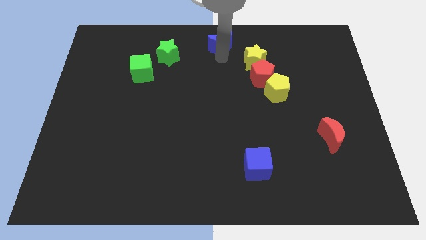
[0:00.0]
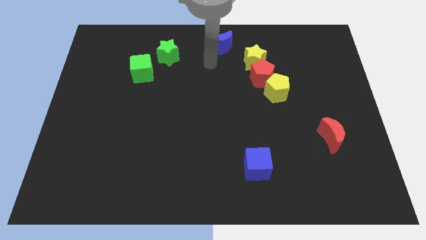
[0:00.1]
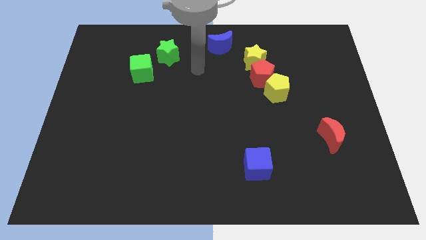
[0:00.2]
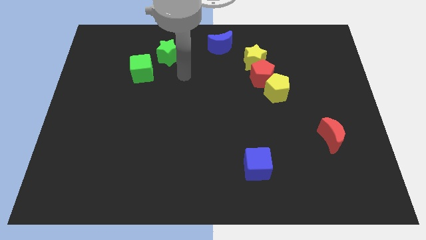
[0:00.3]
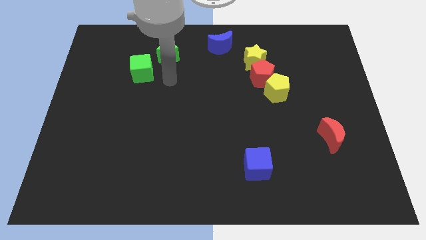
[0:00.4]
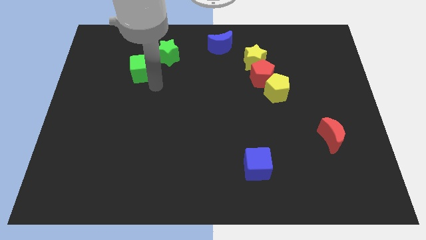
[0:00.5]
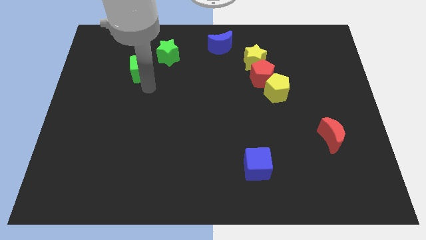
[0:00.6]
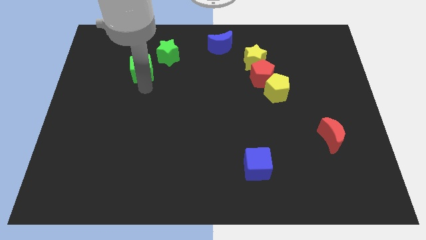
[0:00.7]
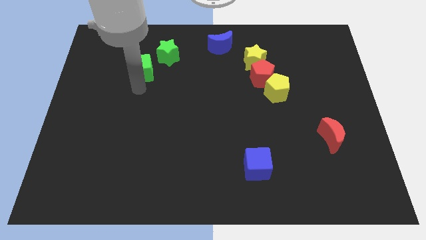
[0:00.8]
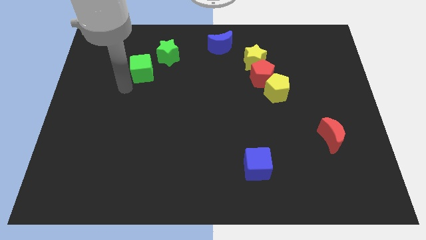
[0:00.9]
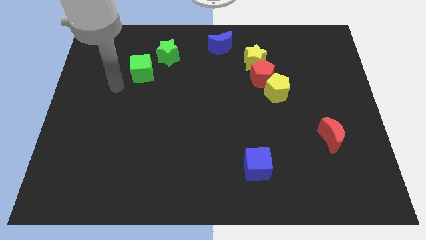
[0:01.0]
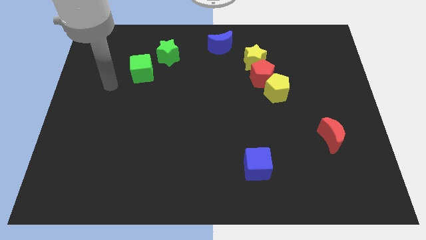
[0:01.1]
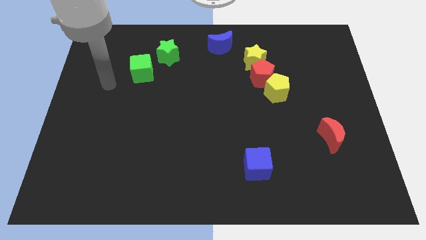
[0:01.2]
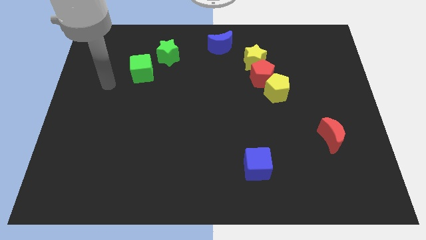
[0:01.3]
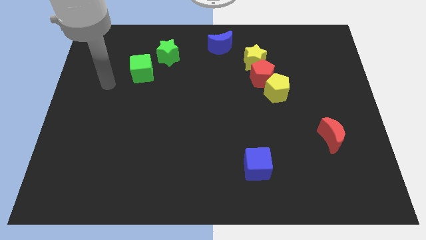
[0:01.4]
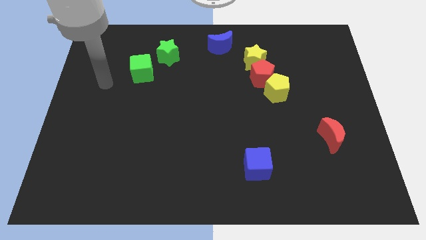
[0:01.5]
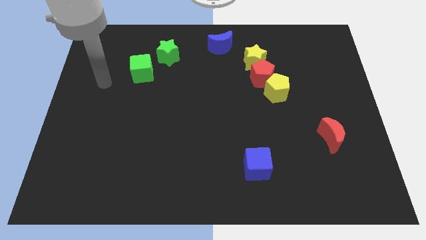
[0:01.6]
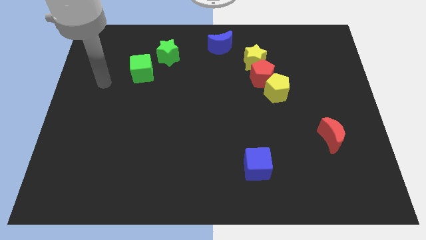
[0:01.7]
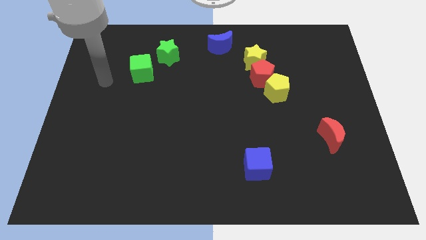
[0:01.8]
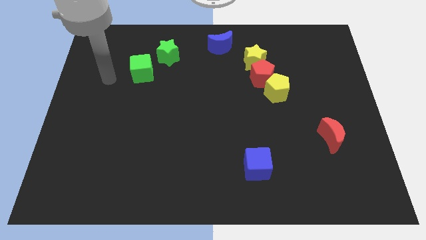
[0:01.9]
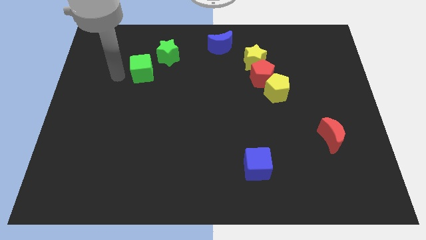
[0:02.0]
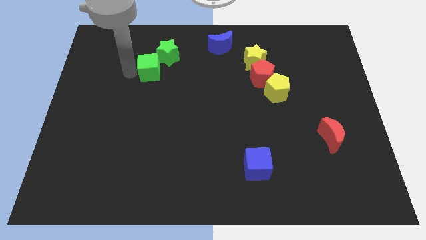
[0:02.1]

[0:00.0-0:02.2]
point your arm at the left of the green cube

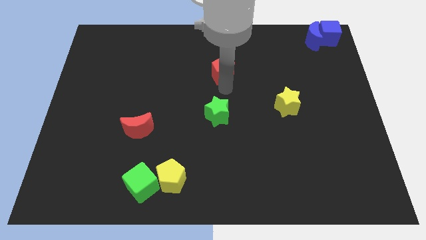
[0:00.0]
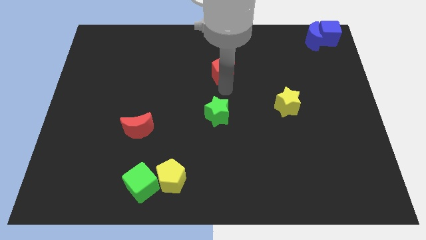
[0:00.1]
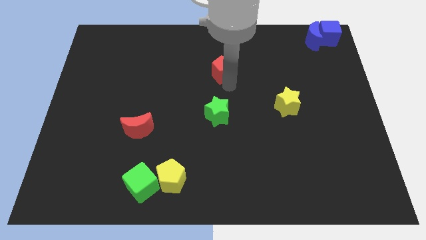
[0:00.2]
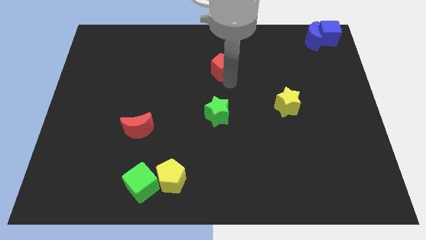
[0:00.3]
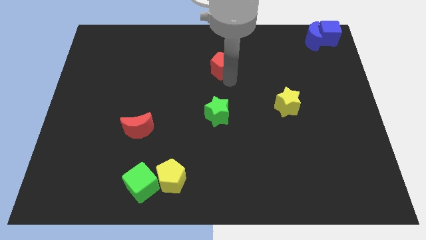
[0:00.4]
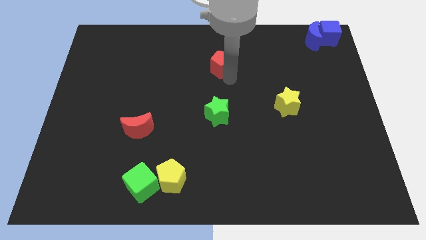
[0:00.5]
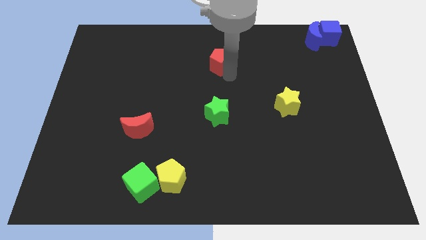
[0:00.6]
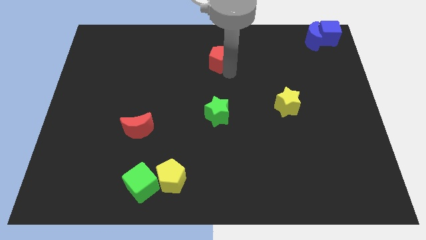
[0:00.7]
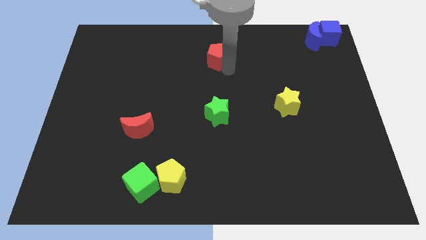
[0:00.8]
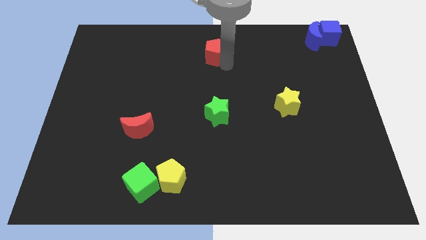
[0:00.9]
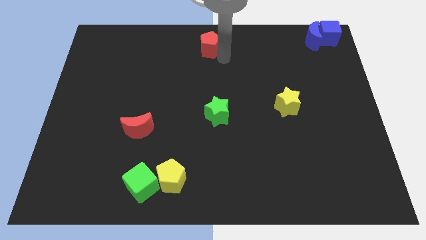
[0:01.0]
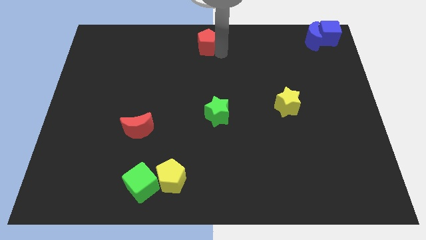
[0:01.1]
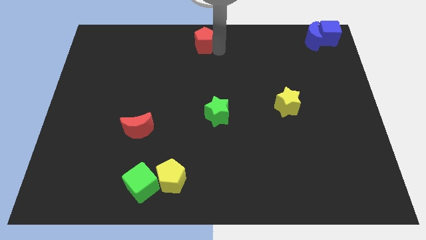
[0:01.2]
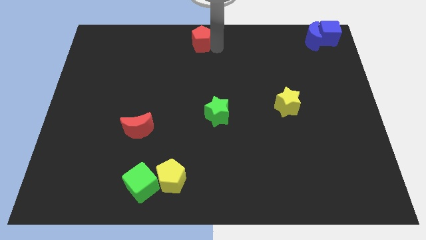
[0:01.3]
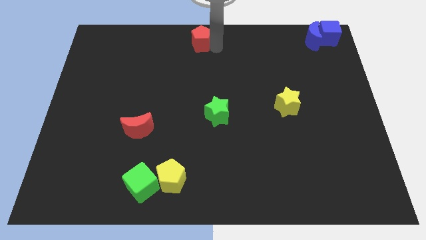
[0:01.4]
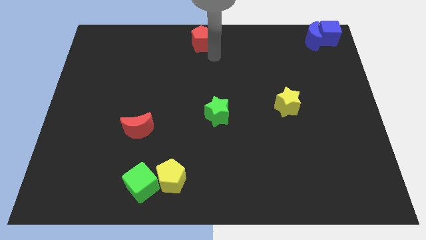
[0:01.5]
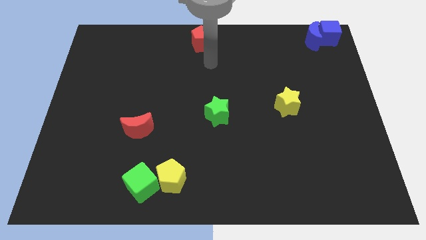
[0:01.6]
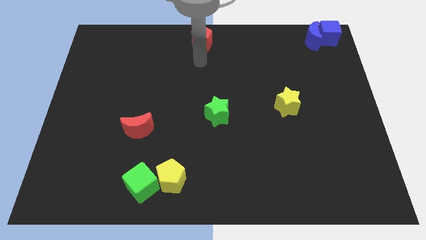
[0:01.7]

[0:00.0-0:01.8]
push the red pentagon to the top center of the board

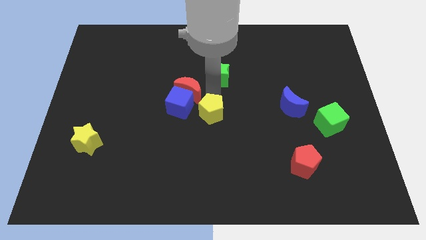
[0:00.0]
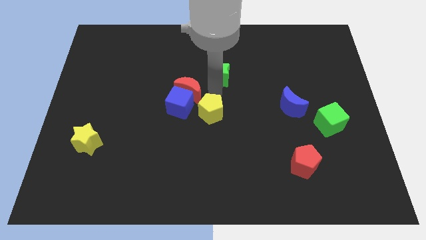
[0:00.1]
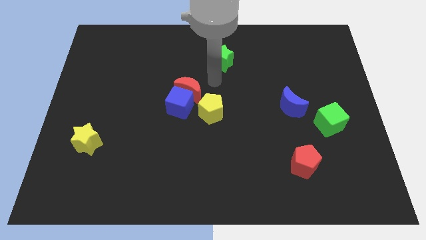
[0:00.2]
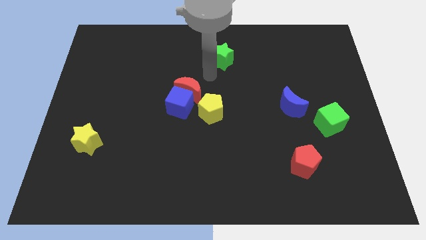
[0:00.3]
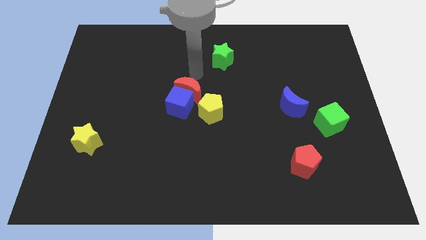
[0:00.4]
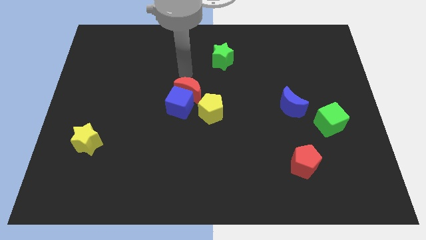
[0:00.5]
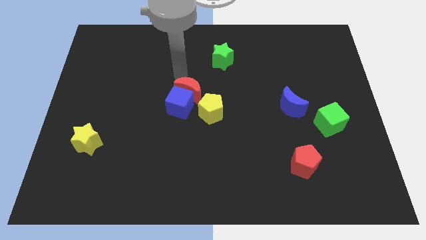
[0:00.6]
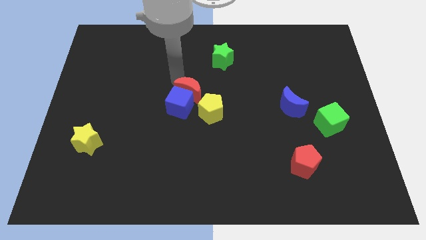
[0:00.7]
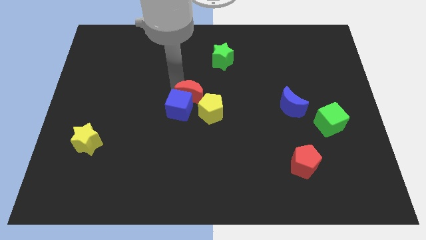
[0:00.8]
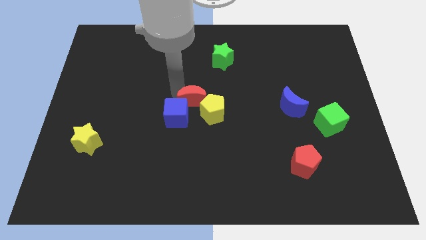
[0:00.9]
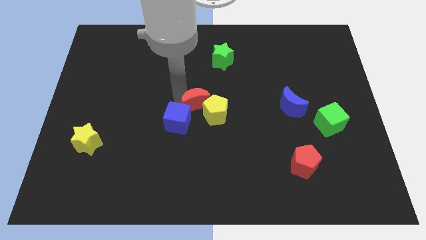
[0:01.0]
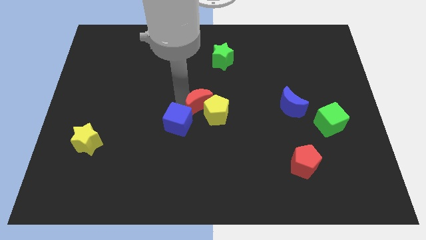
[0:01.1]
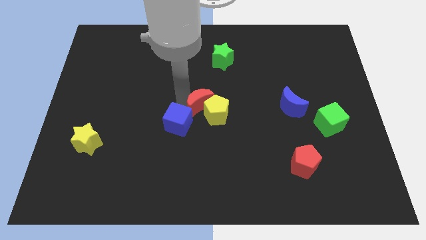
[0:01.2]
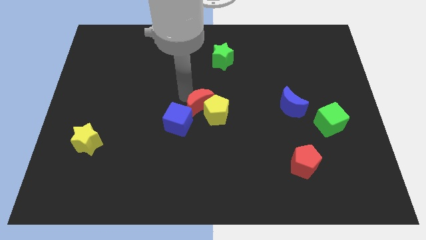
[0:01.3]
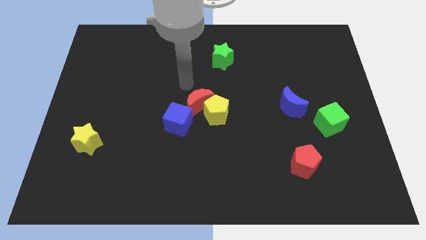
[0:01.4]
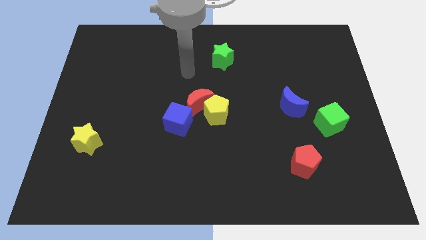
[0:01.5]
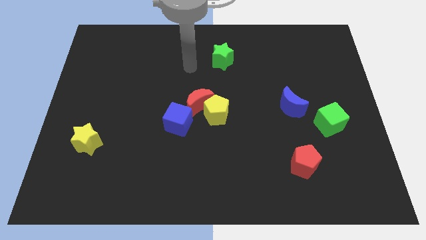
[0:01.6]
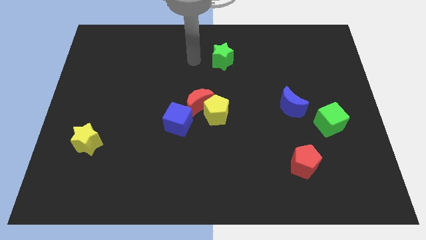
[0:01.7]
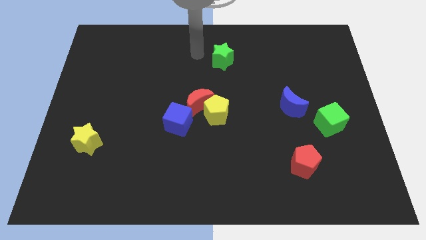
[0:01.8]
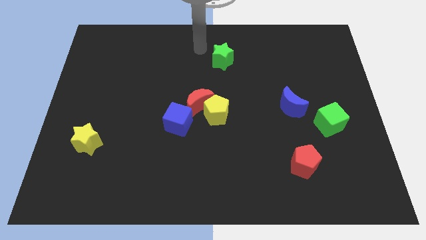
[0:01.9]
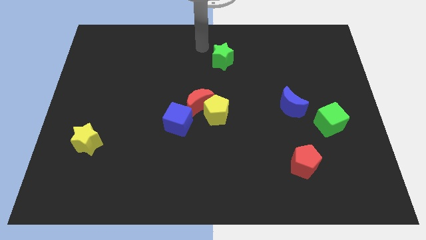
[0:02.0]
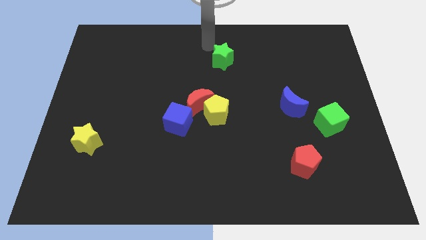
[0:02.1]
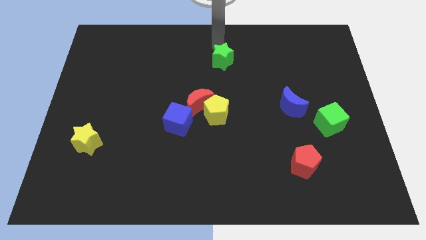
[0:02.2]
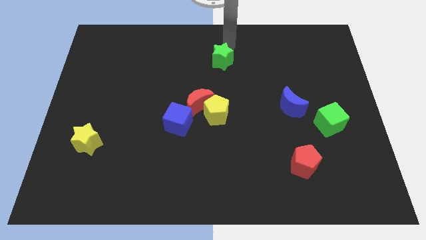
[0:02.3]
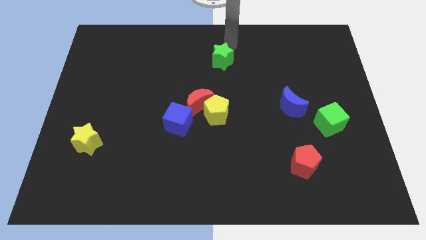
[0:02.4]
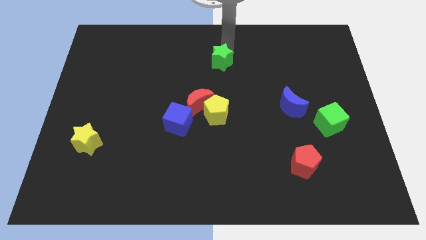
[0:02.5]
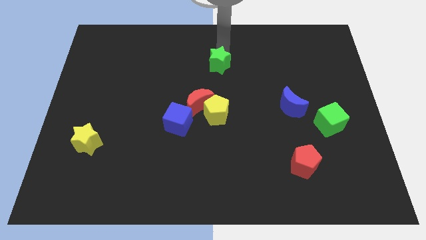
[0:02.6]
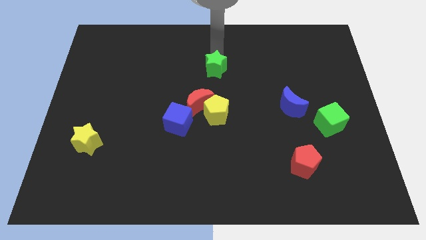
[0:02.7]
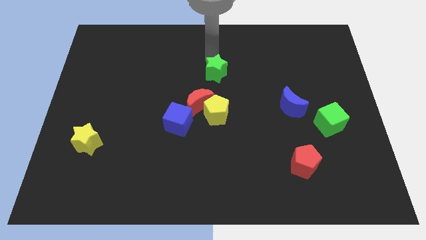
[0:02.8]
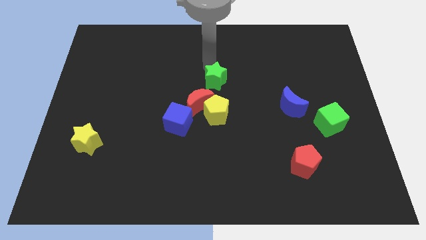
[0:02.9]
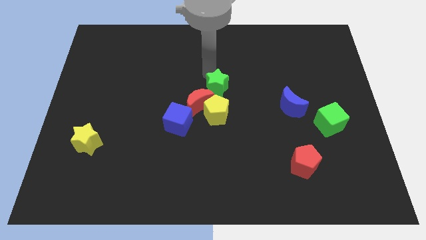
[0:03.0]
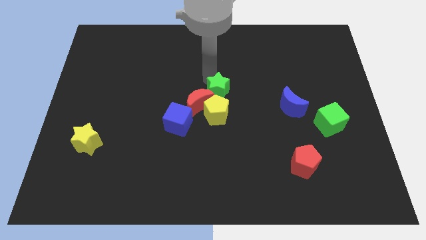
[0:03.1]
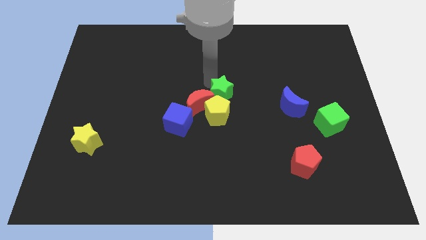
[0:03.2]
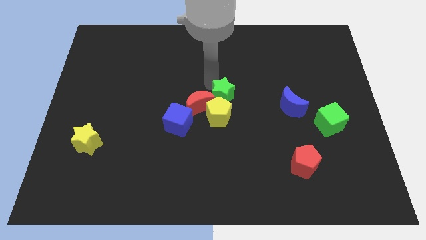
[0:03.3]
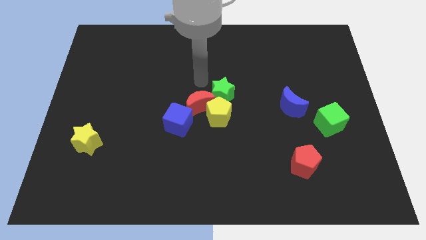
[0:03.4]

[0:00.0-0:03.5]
place the yellow pentagon green star red moon and blue cube at the center of the board

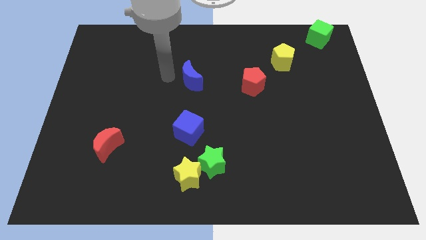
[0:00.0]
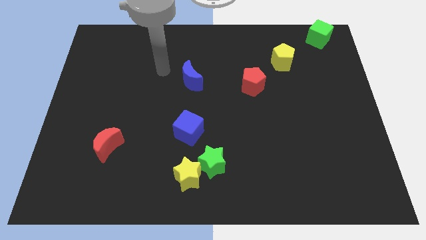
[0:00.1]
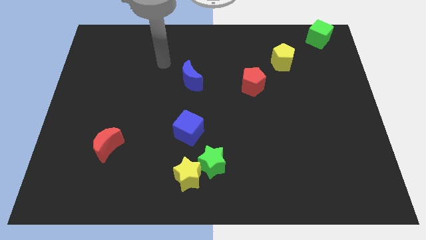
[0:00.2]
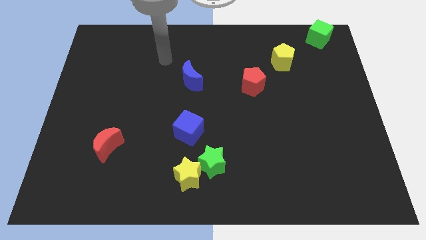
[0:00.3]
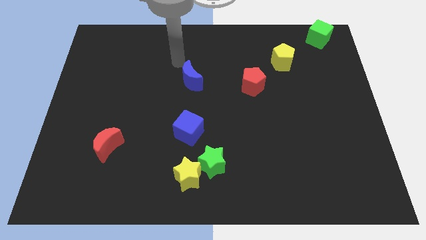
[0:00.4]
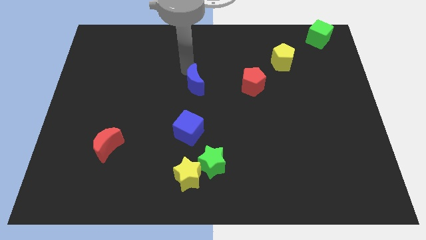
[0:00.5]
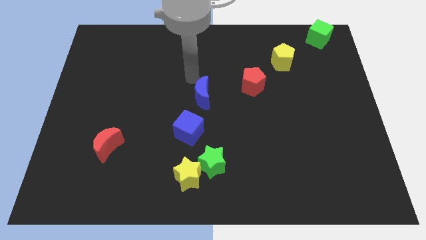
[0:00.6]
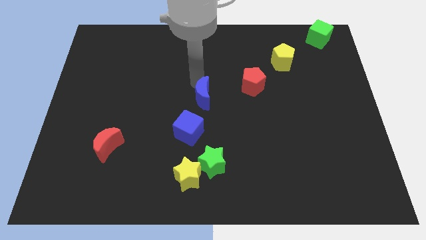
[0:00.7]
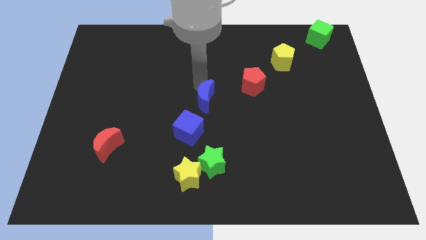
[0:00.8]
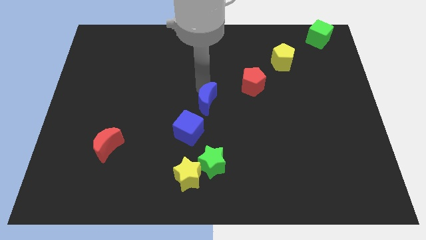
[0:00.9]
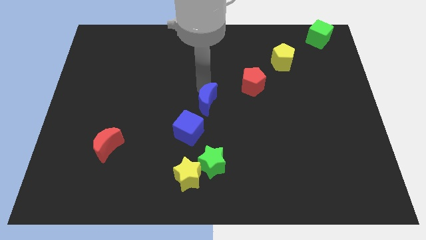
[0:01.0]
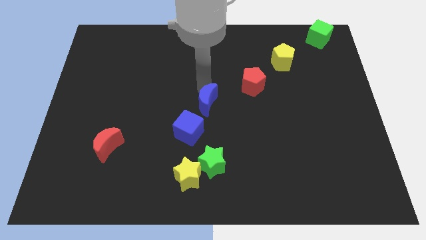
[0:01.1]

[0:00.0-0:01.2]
place blue crescent at the top of blue cube

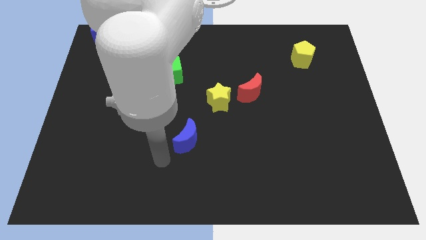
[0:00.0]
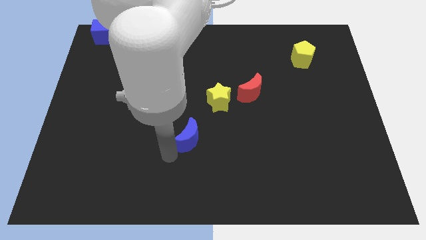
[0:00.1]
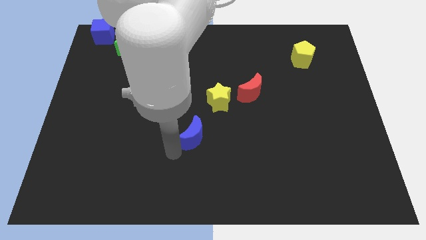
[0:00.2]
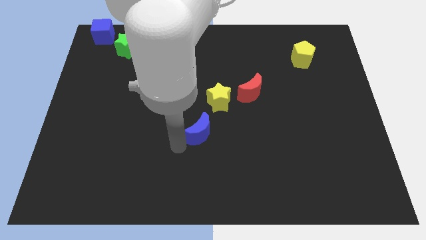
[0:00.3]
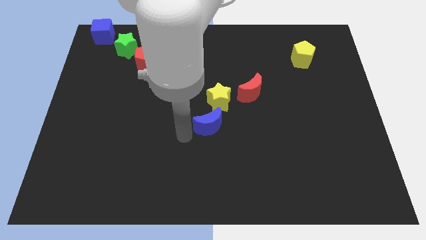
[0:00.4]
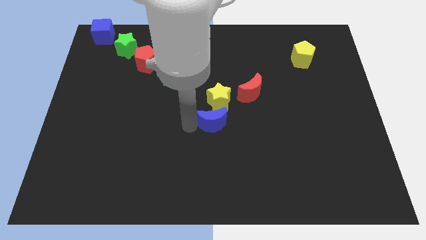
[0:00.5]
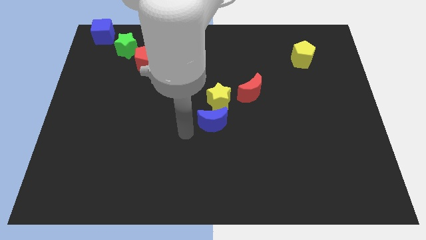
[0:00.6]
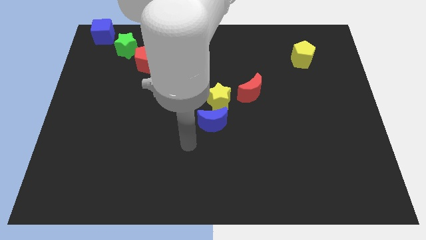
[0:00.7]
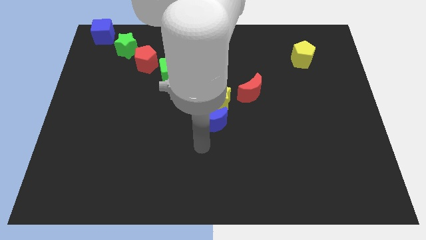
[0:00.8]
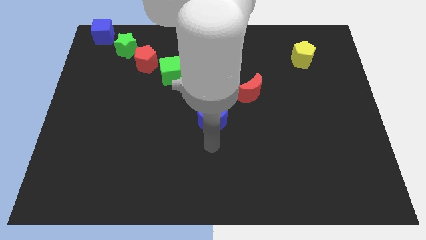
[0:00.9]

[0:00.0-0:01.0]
move blue moon towards center
